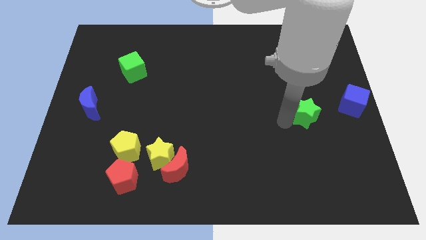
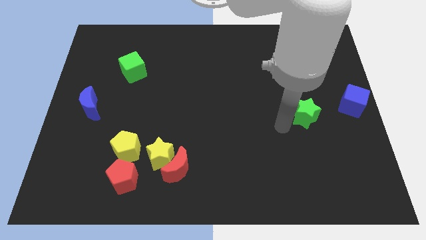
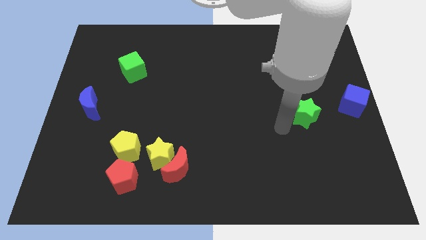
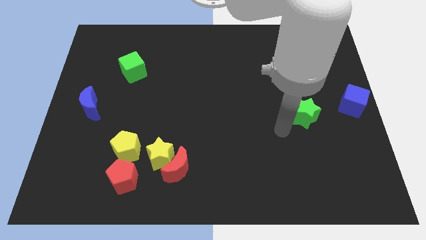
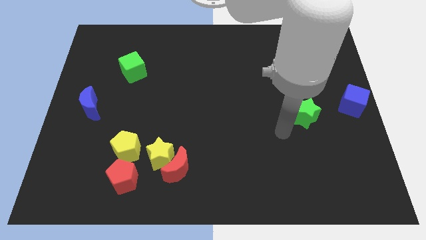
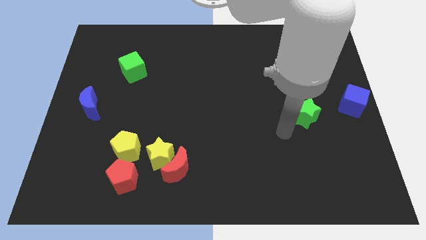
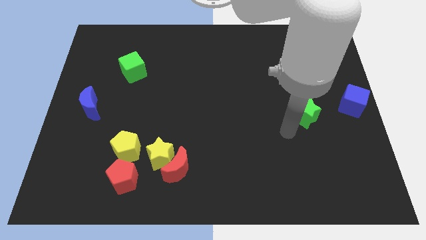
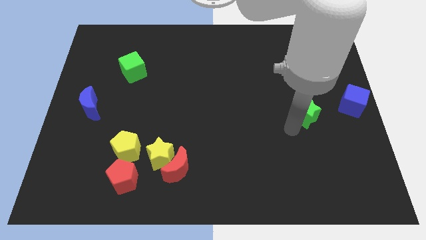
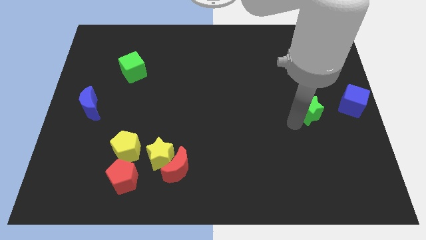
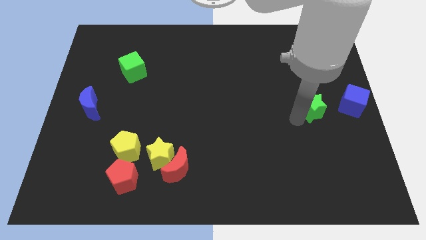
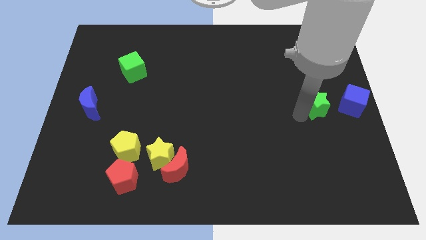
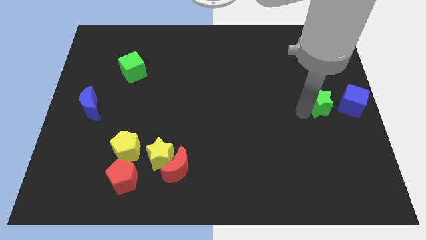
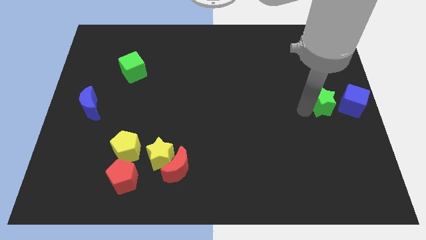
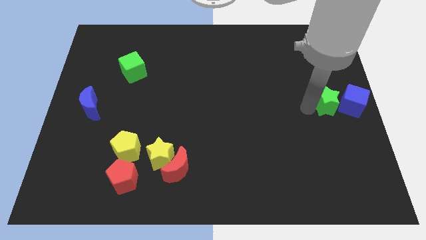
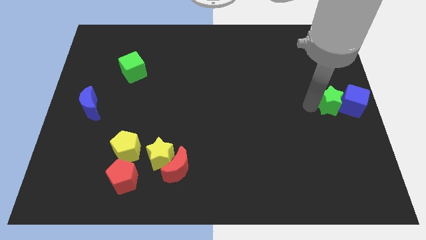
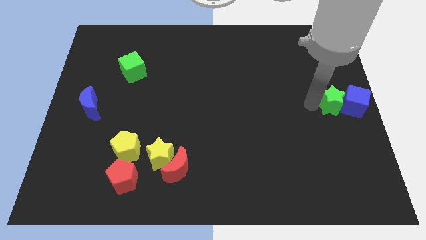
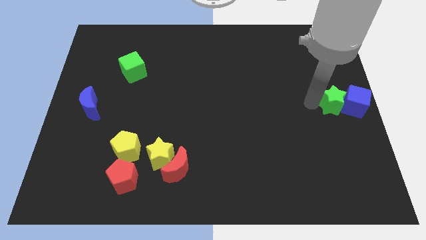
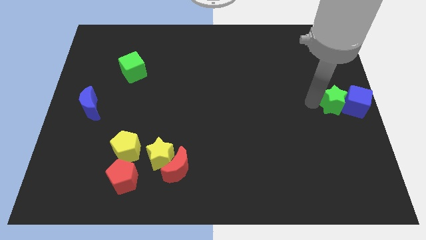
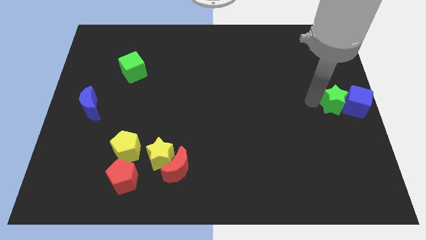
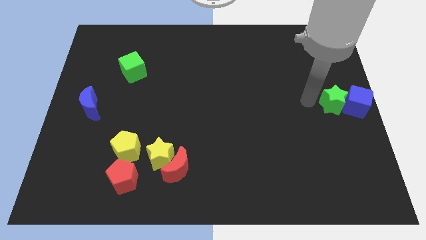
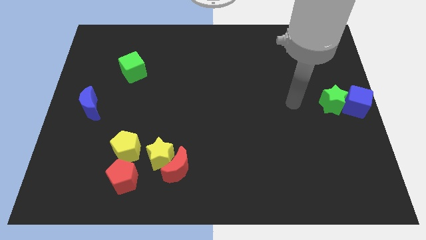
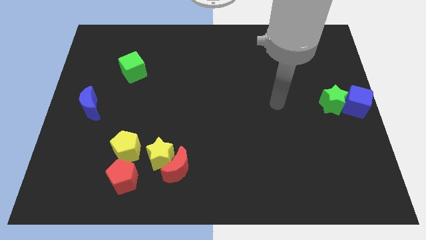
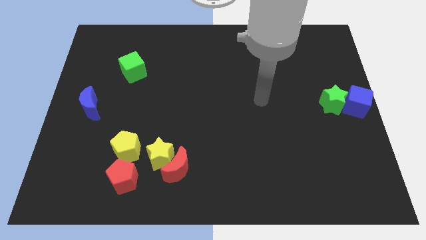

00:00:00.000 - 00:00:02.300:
push the green star into the blue cube

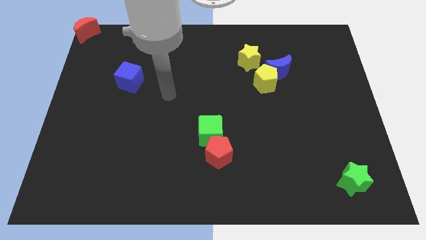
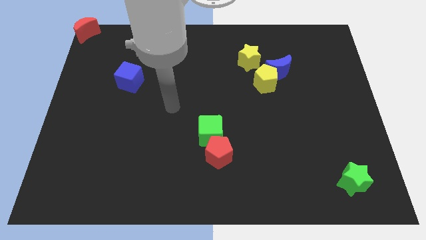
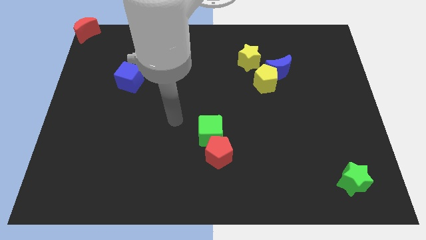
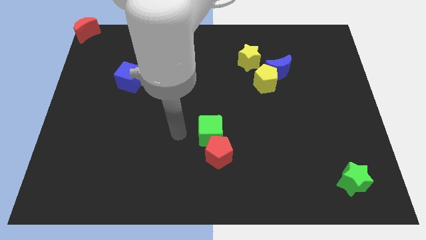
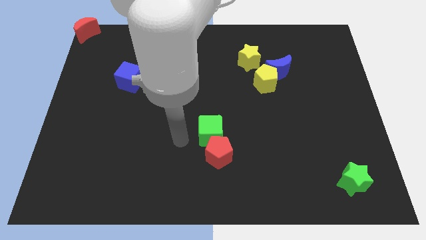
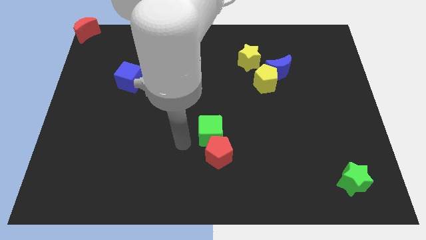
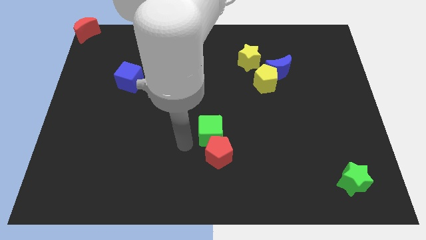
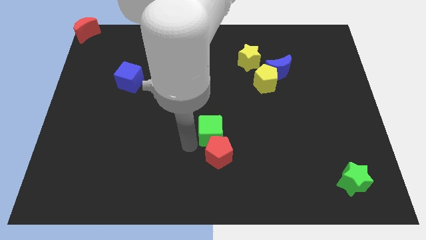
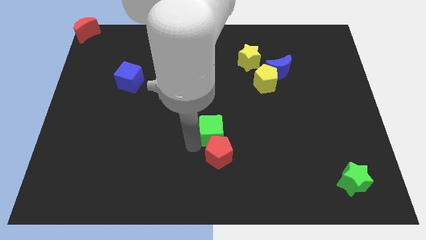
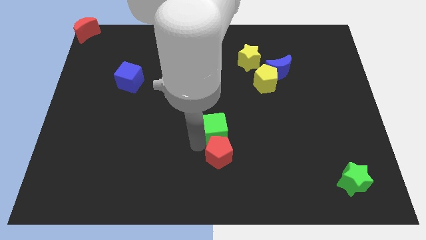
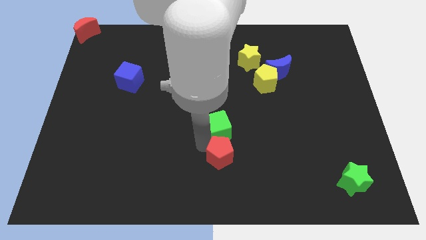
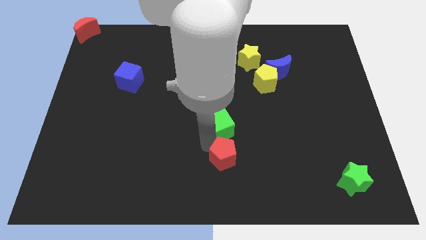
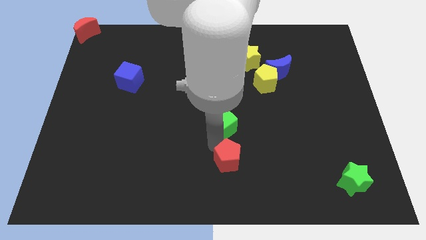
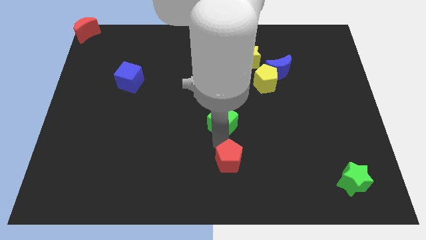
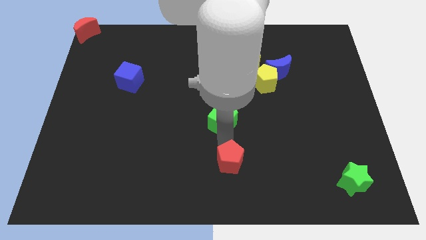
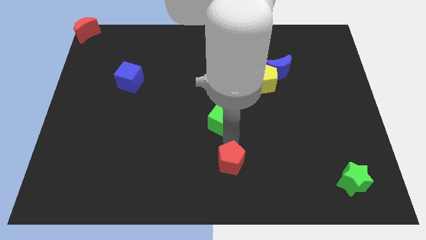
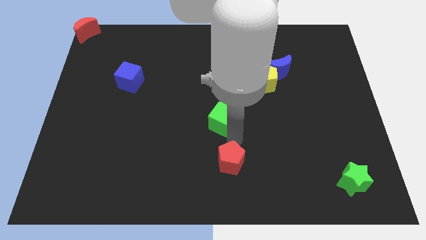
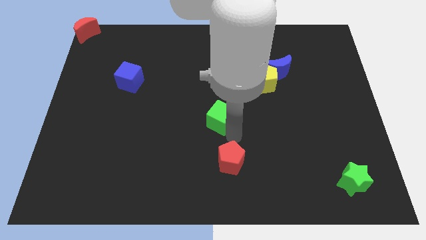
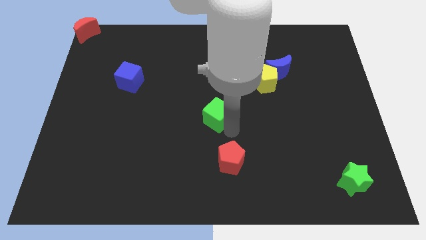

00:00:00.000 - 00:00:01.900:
move the green cube away from the red pentagon

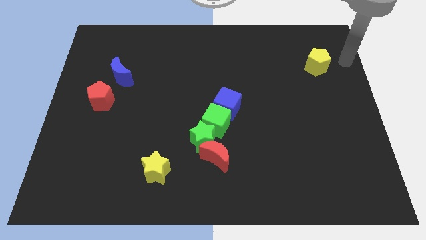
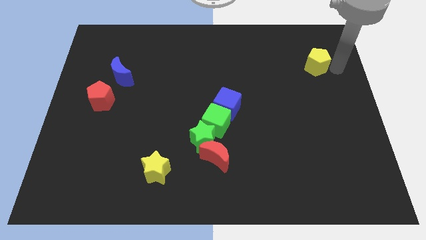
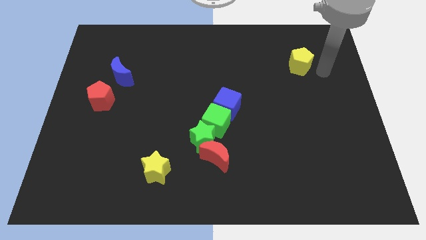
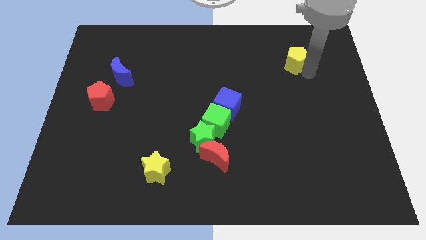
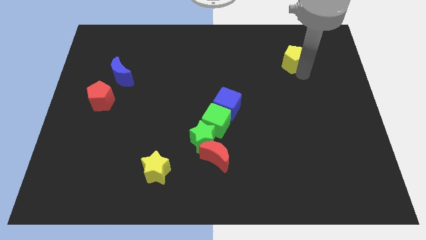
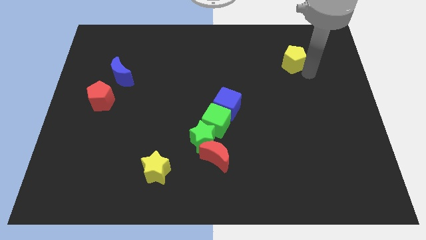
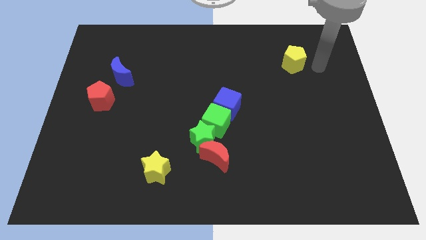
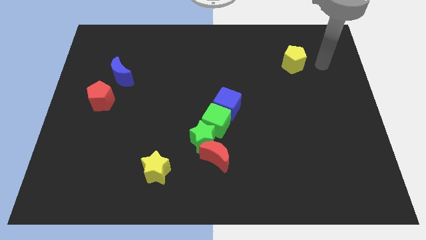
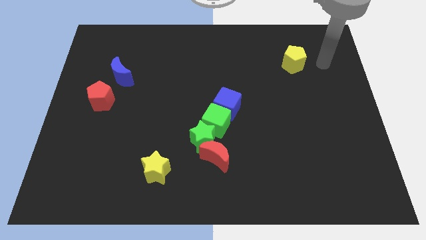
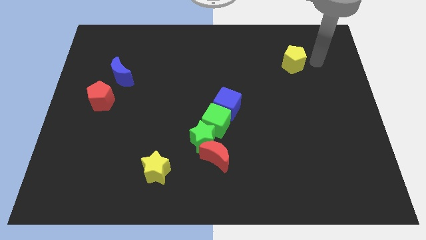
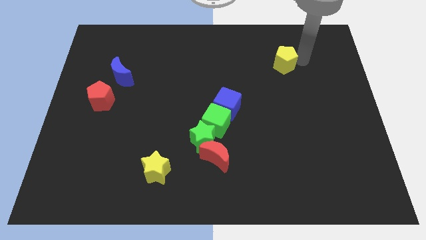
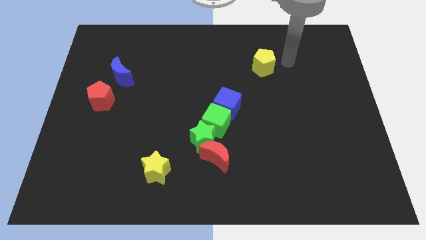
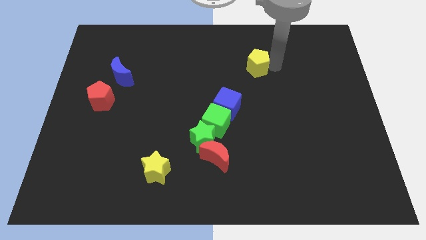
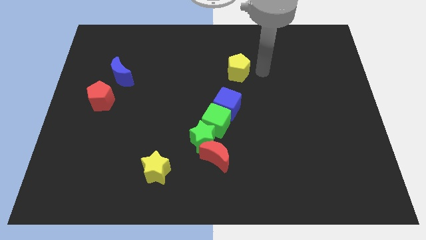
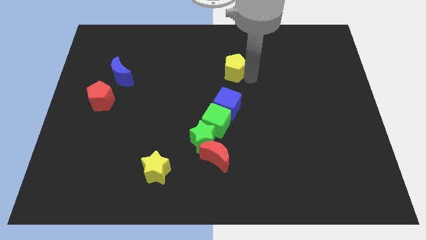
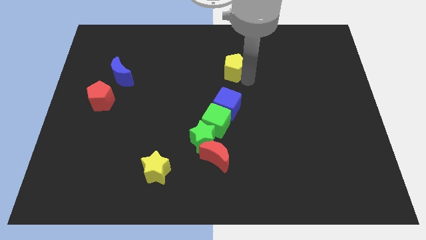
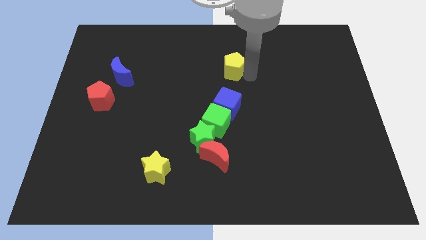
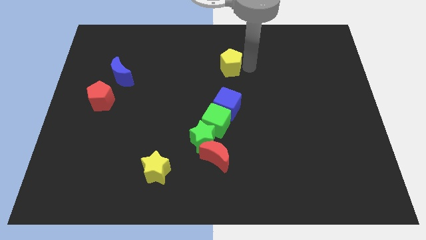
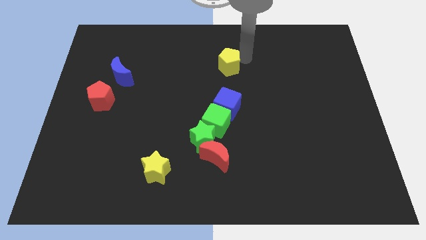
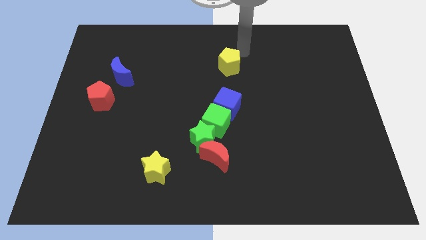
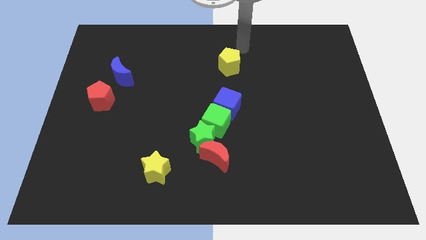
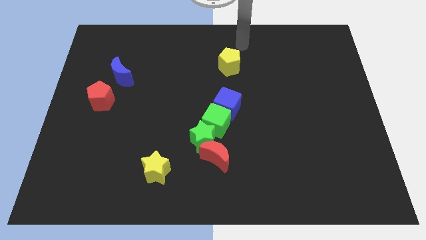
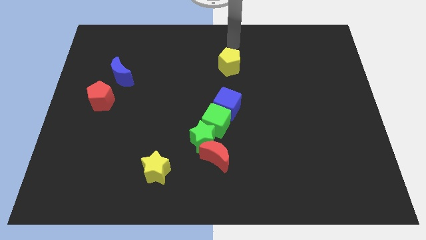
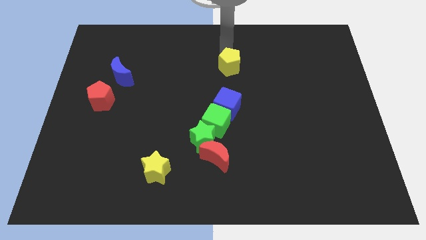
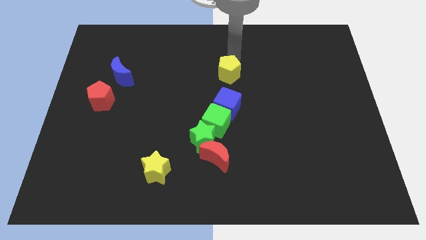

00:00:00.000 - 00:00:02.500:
drag the yellow pentagon to the top left of the blue cube

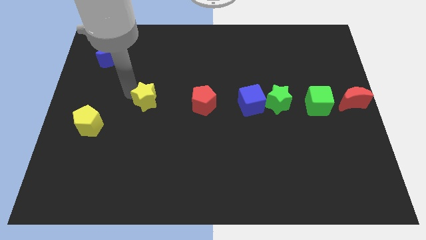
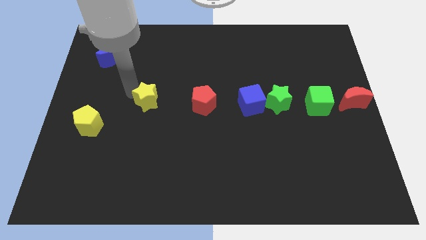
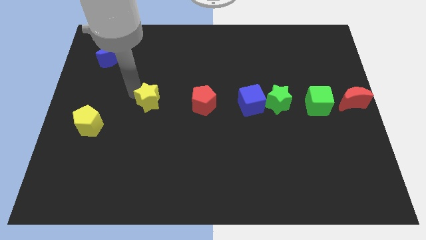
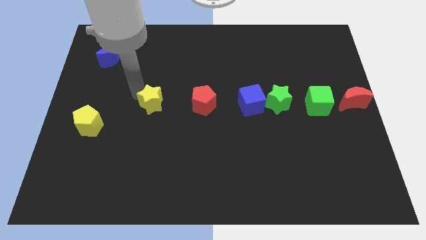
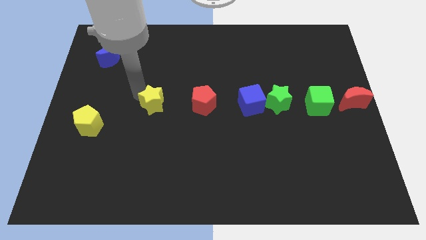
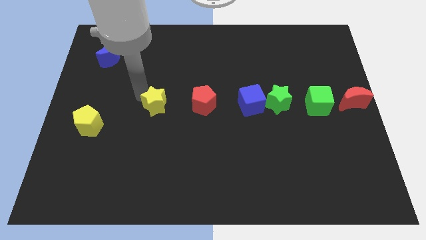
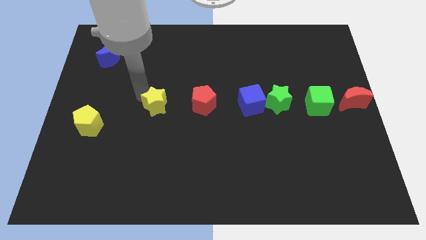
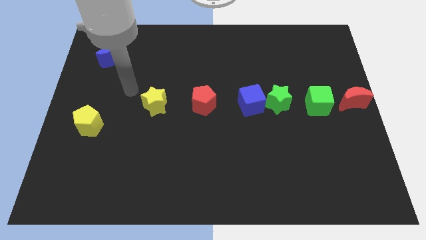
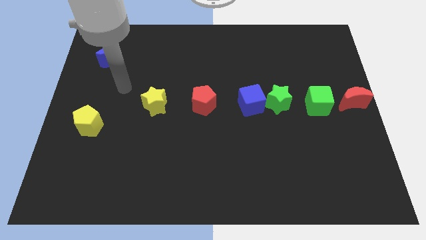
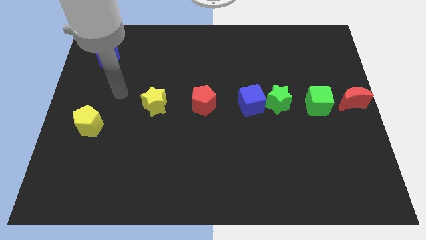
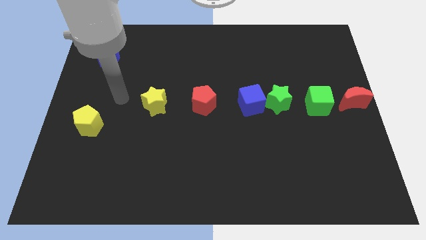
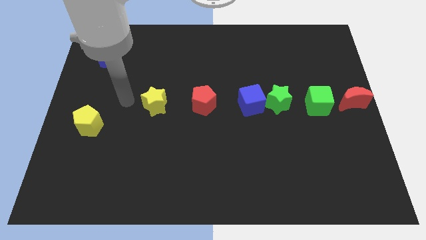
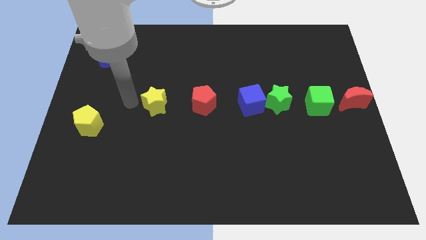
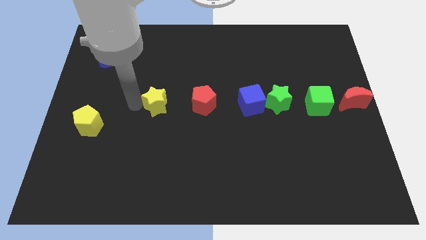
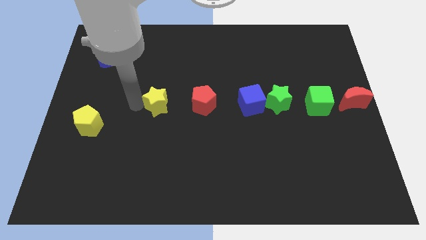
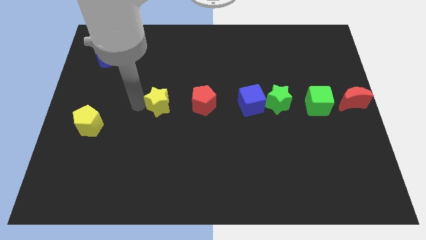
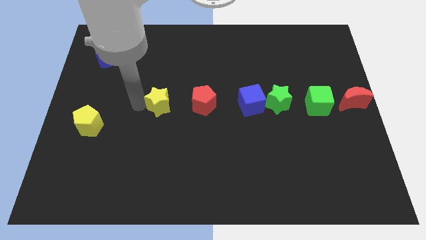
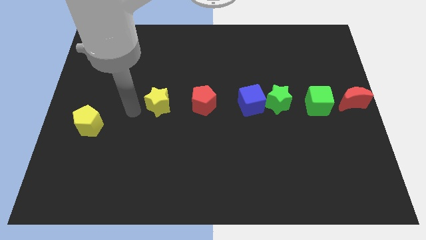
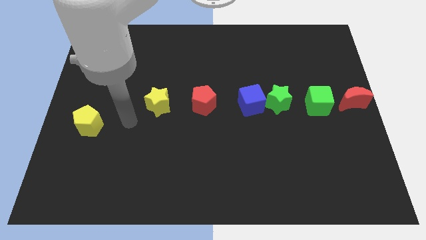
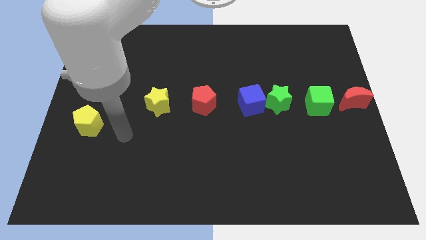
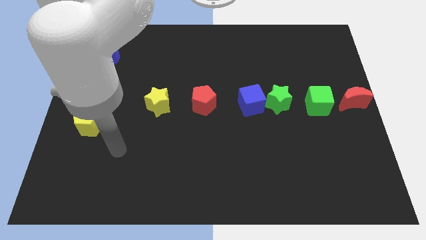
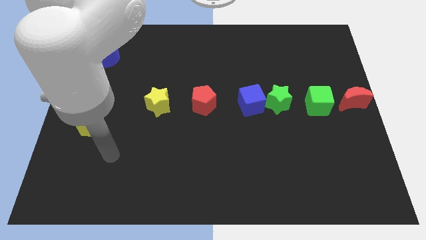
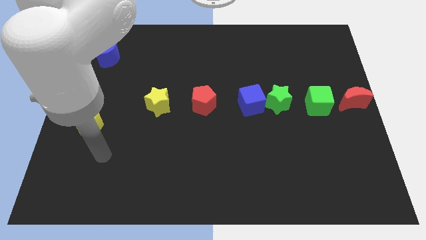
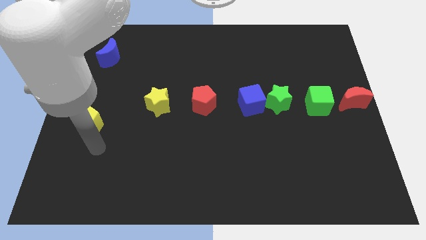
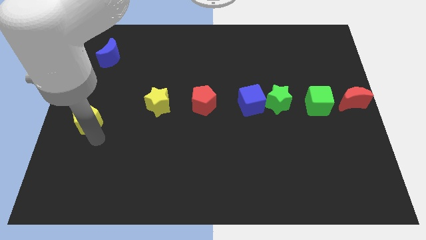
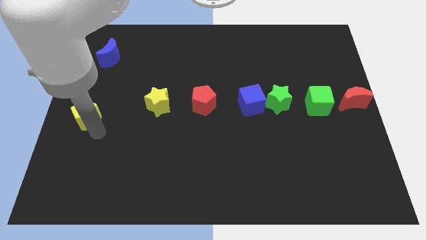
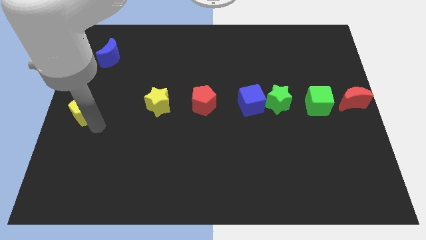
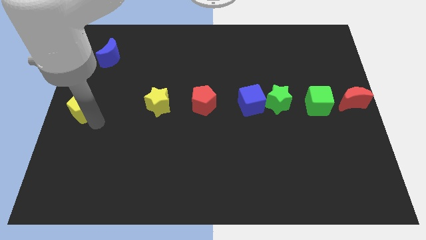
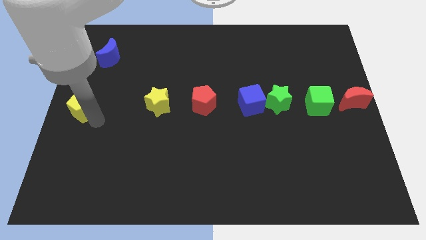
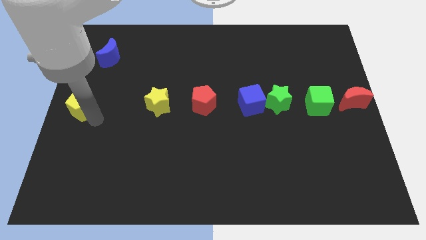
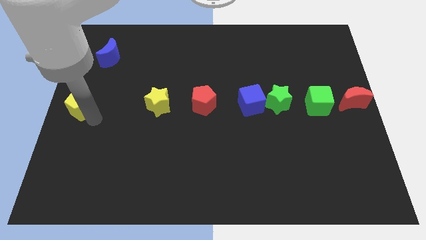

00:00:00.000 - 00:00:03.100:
slightly push the yellow pentagon upwards
